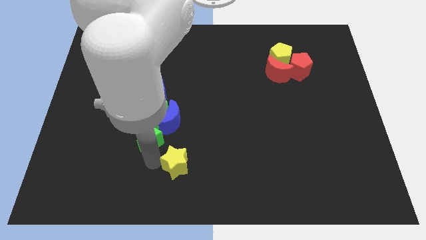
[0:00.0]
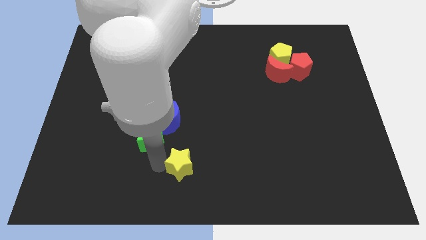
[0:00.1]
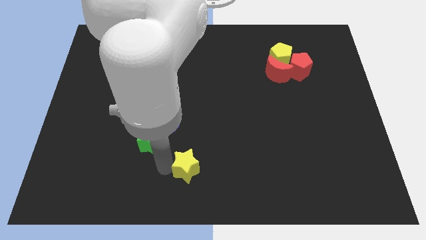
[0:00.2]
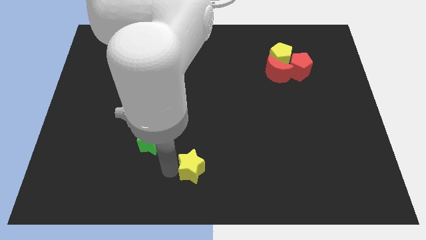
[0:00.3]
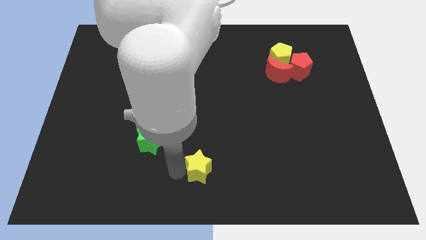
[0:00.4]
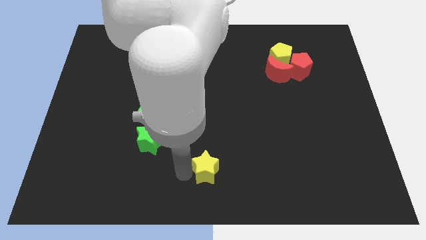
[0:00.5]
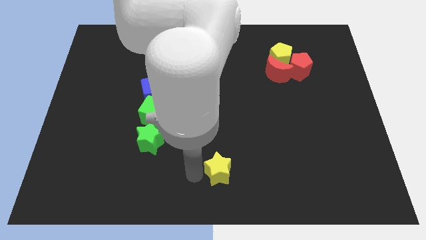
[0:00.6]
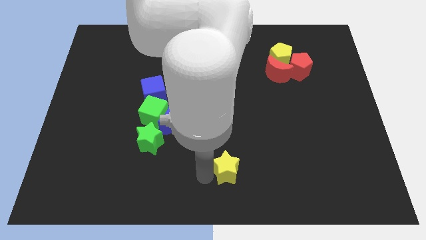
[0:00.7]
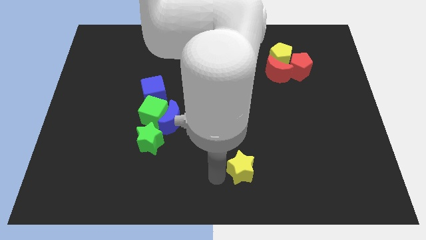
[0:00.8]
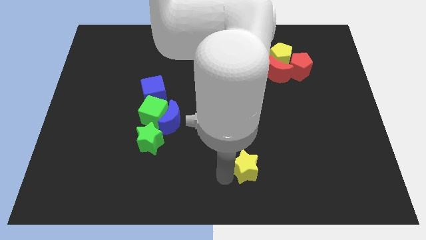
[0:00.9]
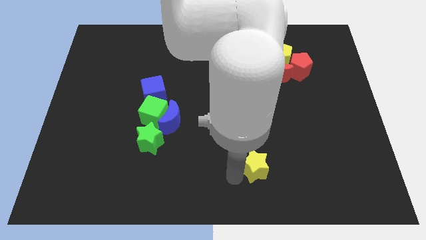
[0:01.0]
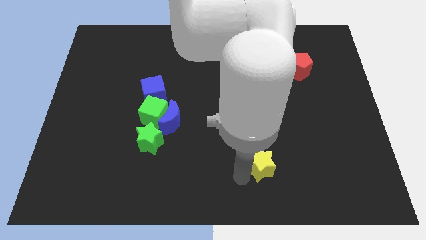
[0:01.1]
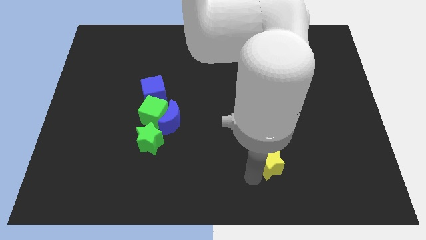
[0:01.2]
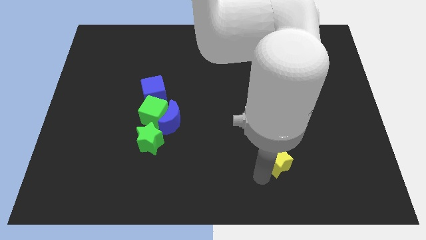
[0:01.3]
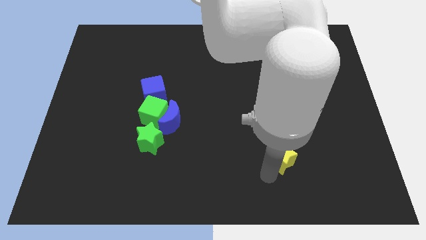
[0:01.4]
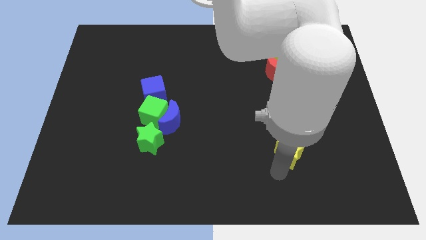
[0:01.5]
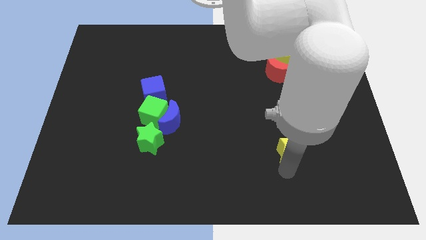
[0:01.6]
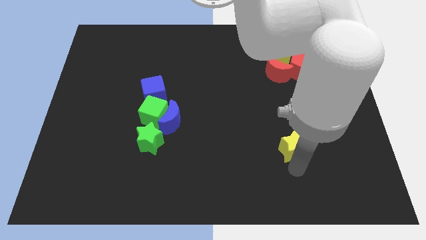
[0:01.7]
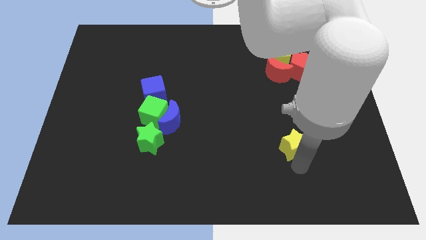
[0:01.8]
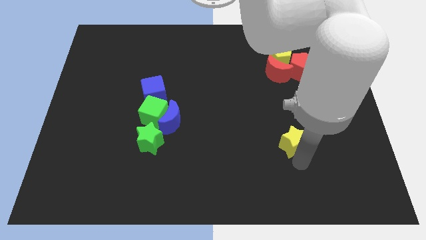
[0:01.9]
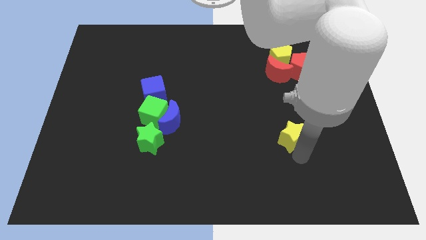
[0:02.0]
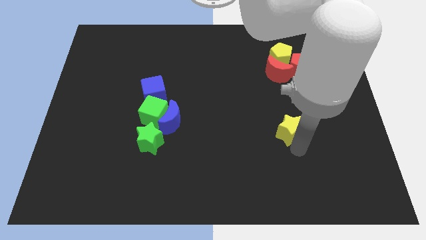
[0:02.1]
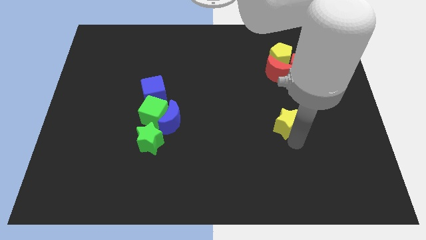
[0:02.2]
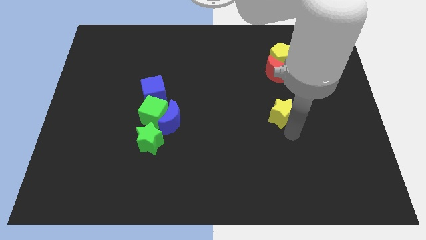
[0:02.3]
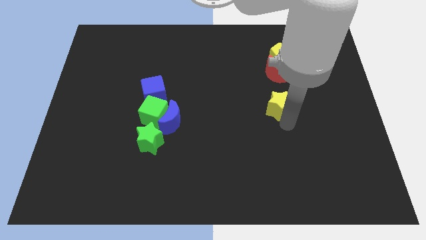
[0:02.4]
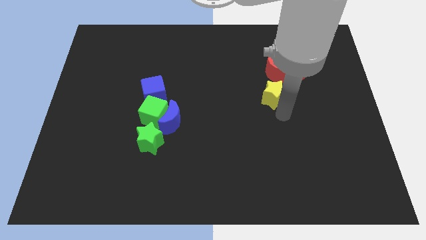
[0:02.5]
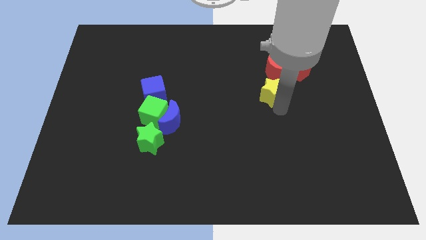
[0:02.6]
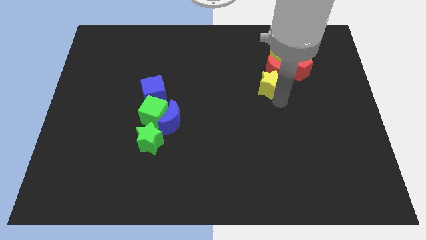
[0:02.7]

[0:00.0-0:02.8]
push the yellow star below to the red crescent

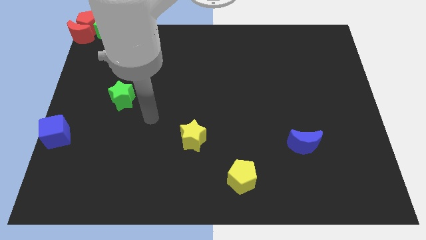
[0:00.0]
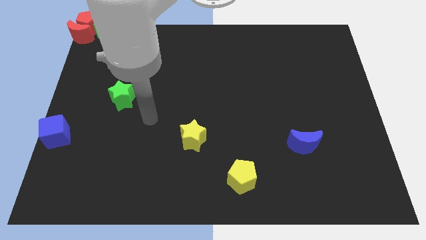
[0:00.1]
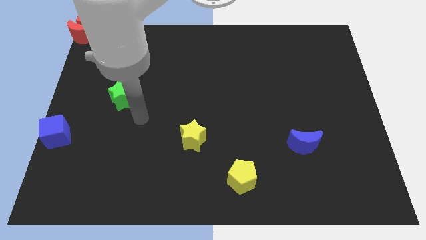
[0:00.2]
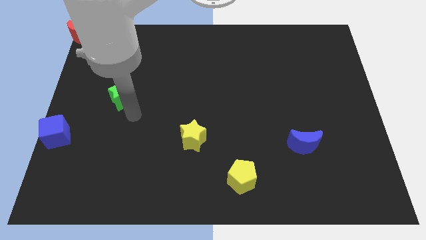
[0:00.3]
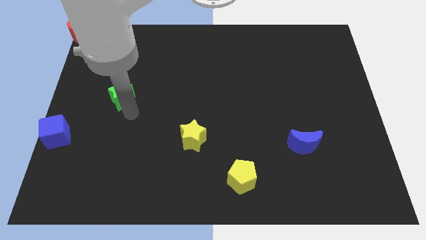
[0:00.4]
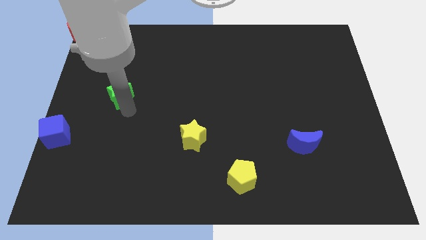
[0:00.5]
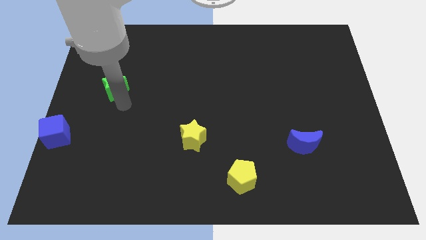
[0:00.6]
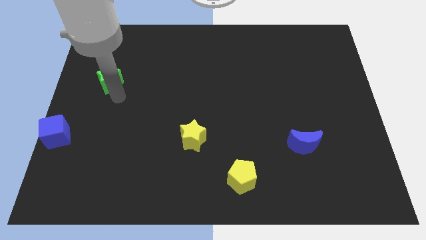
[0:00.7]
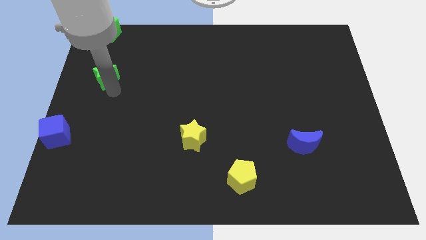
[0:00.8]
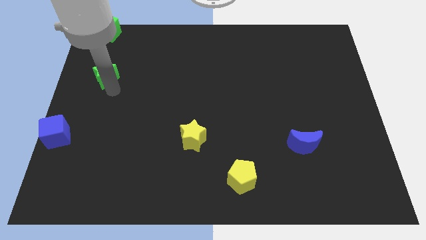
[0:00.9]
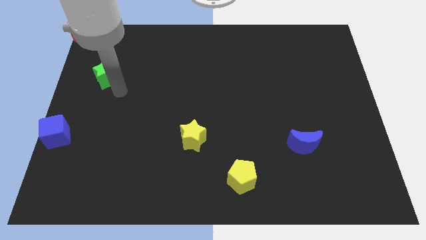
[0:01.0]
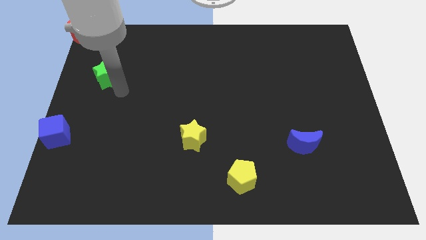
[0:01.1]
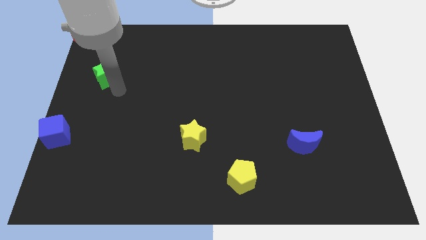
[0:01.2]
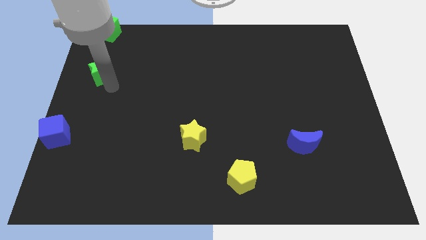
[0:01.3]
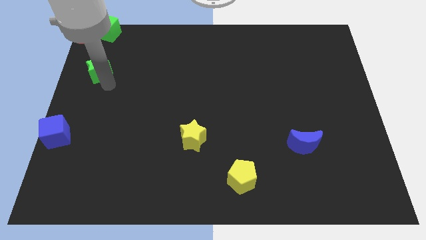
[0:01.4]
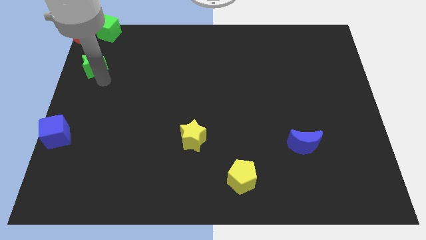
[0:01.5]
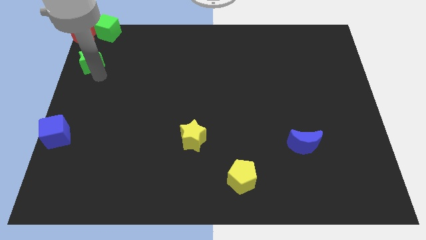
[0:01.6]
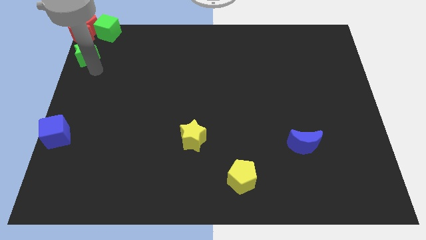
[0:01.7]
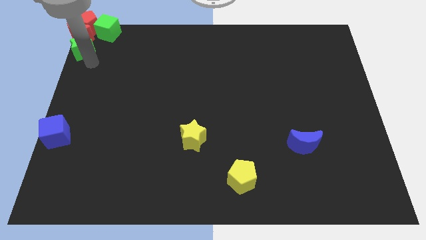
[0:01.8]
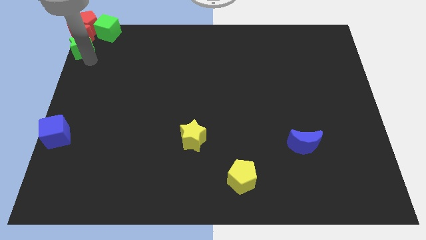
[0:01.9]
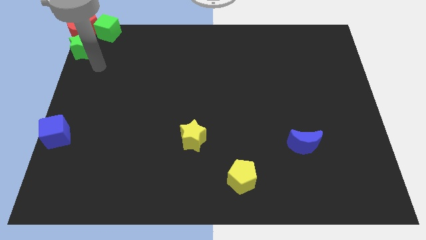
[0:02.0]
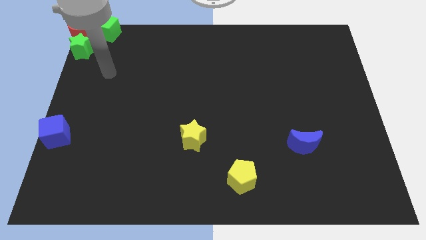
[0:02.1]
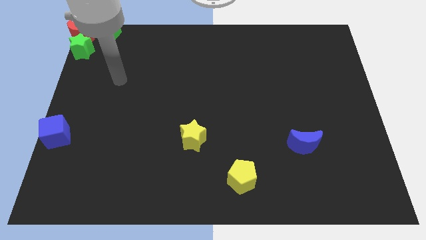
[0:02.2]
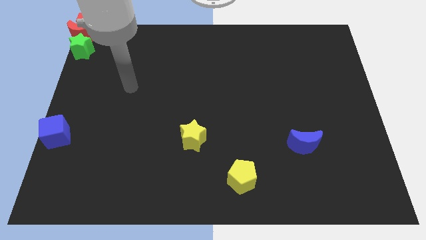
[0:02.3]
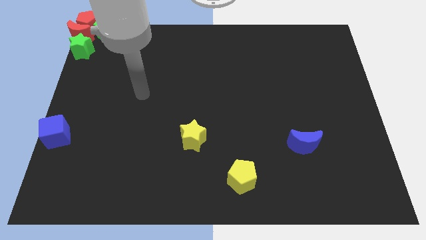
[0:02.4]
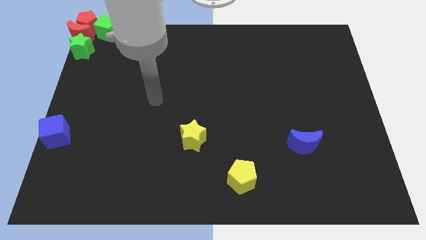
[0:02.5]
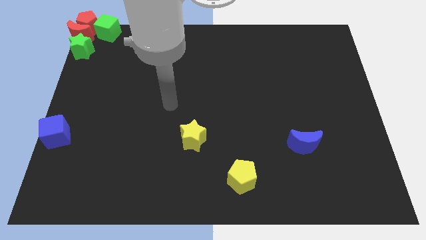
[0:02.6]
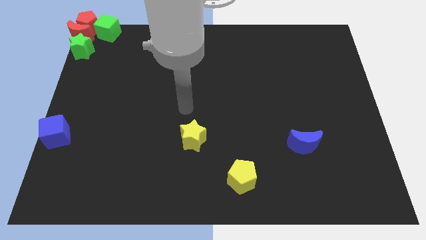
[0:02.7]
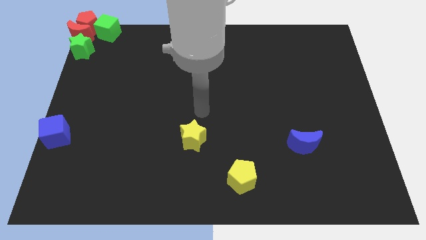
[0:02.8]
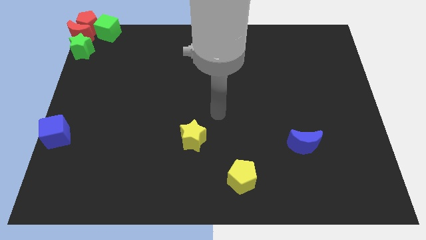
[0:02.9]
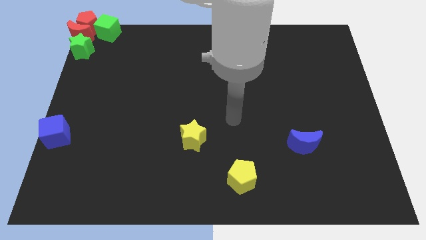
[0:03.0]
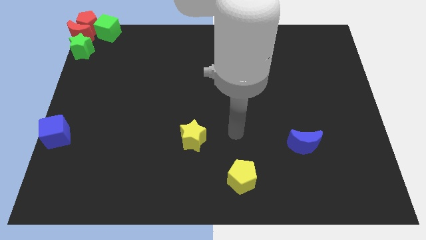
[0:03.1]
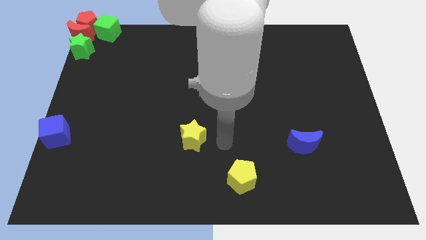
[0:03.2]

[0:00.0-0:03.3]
move the green star to the bottom of the red crescent

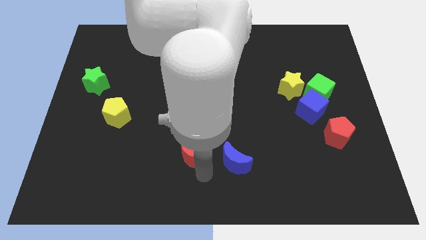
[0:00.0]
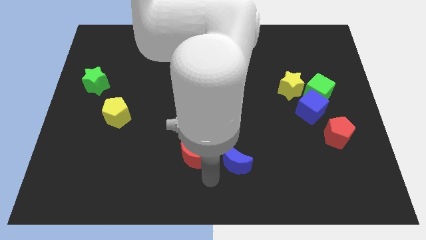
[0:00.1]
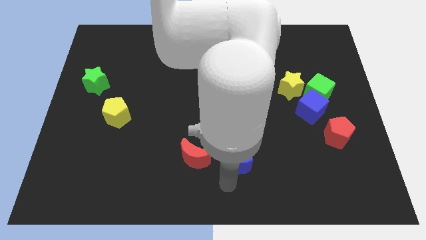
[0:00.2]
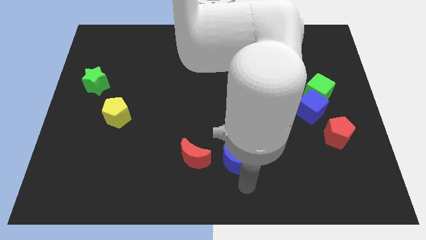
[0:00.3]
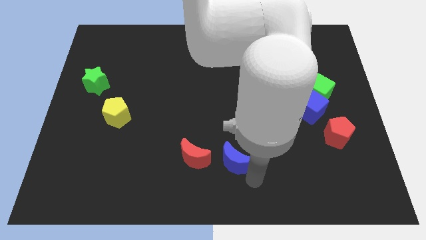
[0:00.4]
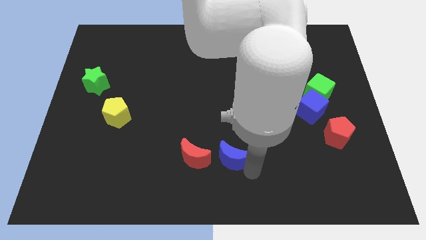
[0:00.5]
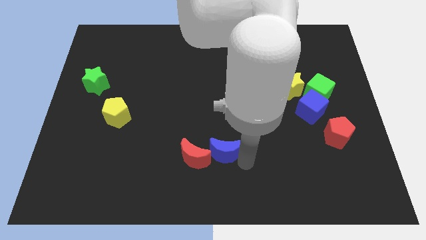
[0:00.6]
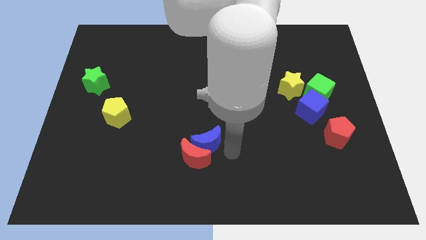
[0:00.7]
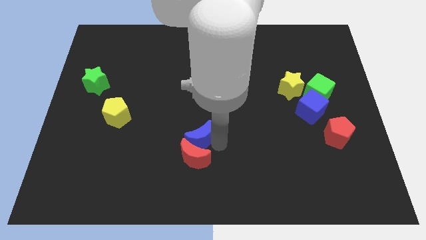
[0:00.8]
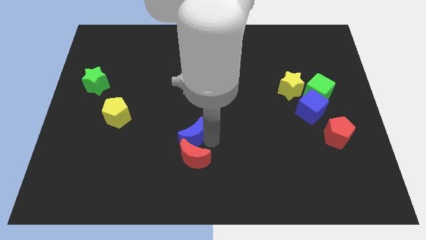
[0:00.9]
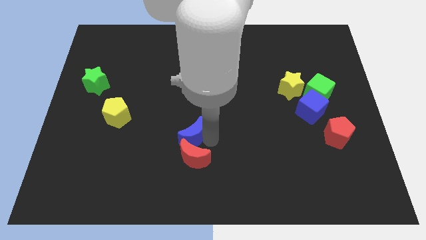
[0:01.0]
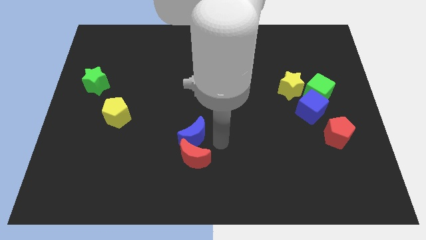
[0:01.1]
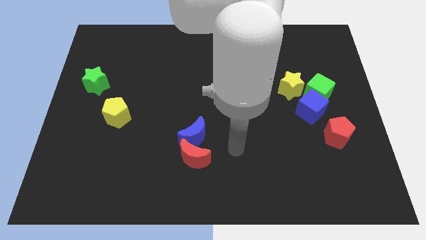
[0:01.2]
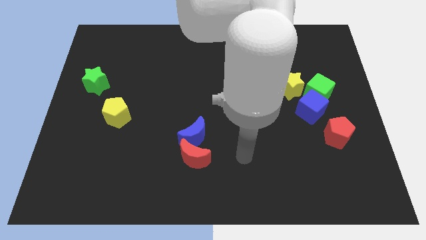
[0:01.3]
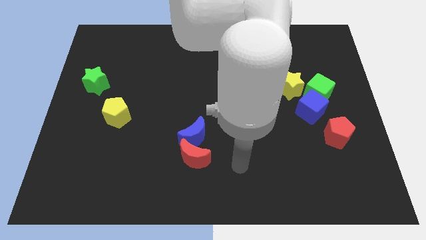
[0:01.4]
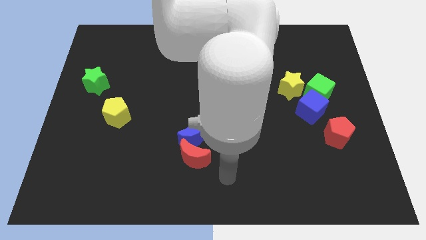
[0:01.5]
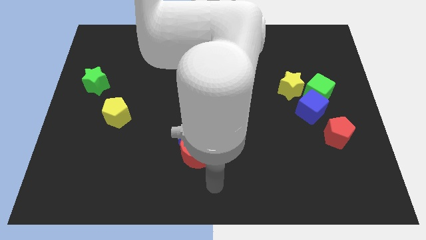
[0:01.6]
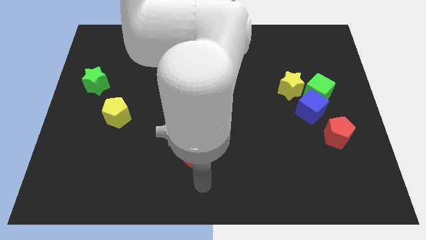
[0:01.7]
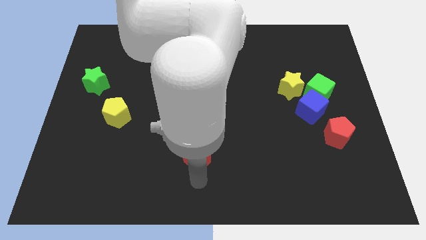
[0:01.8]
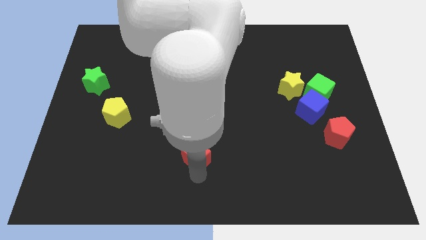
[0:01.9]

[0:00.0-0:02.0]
place blue moon above red moon

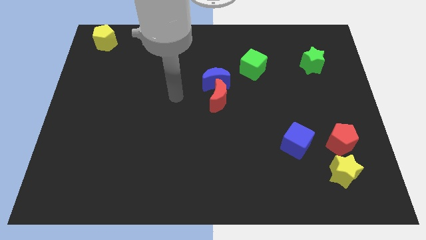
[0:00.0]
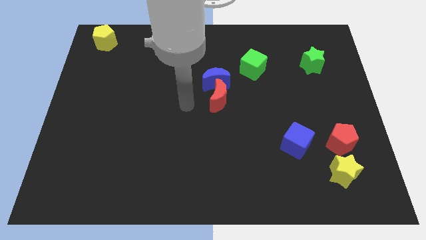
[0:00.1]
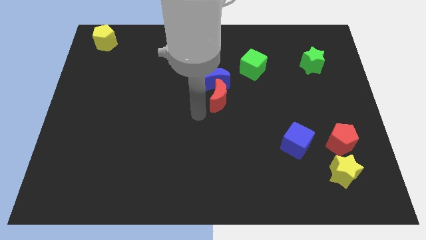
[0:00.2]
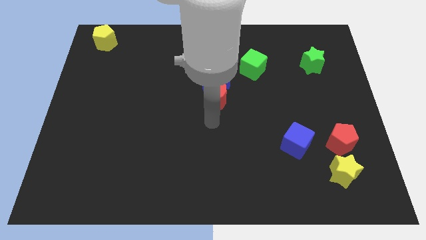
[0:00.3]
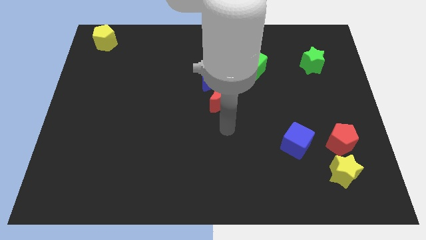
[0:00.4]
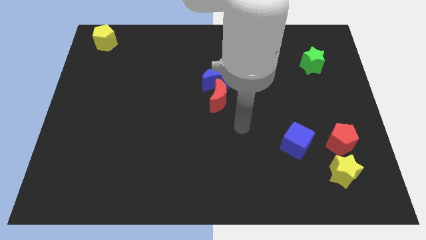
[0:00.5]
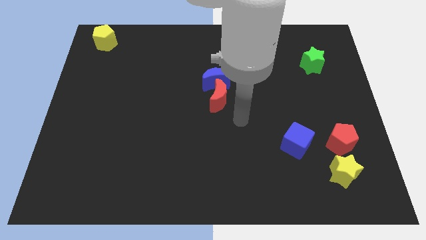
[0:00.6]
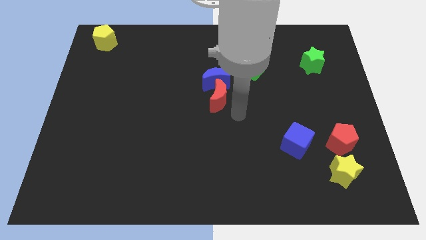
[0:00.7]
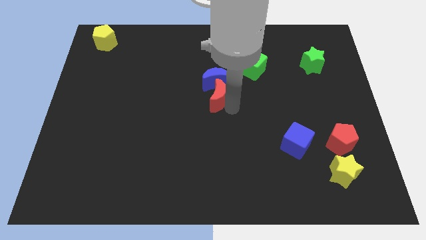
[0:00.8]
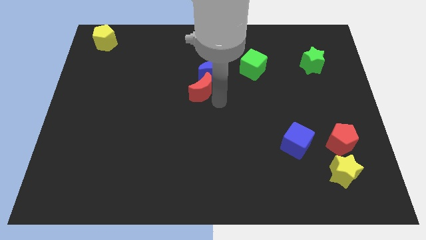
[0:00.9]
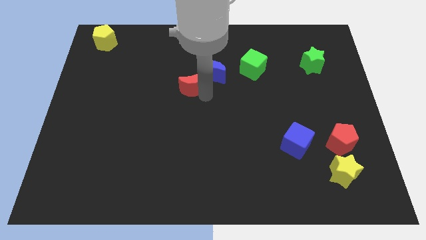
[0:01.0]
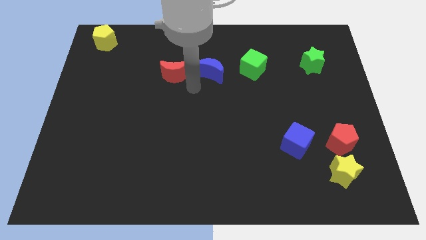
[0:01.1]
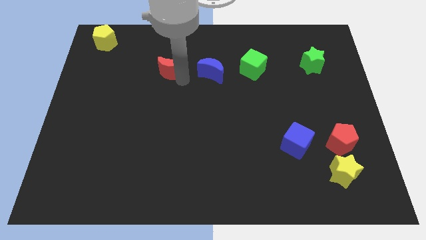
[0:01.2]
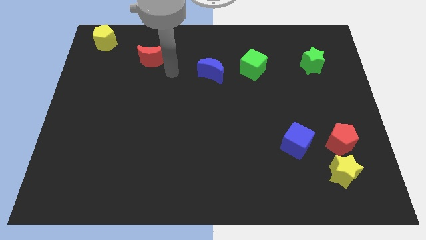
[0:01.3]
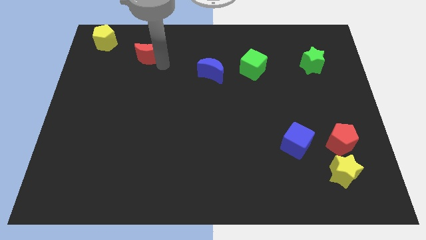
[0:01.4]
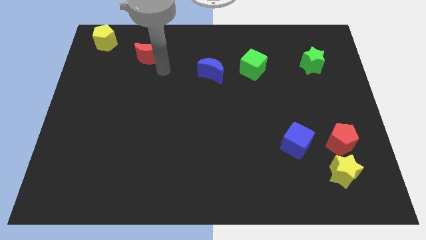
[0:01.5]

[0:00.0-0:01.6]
separate the red moon from the blue moon
